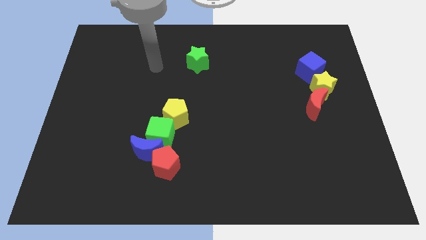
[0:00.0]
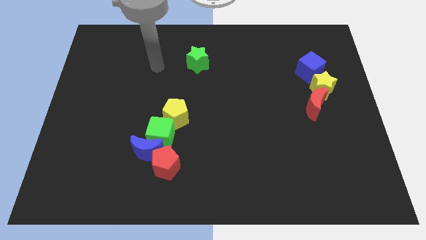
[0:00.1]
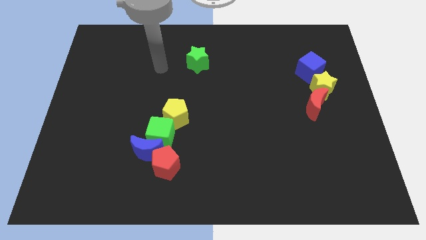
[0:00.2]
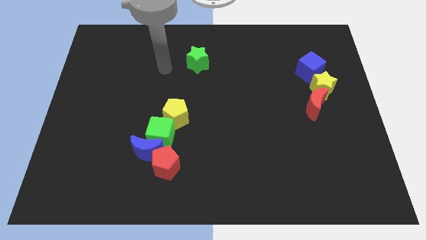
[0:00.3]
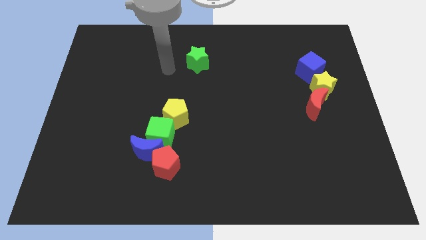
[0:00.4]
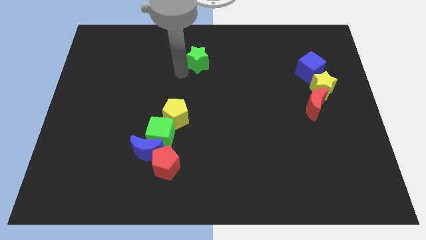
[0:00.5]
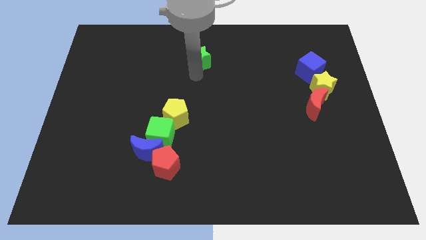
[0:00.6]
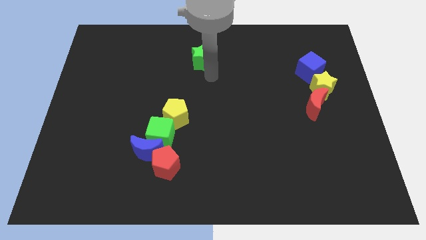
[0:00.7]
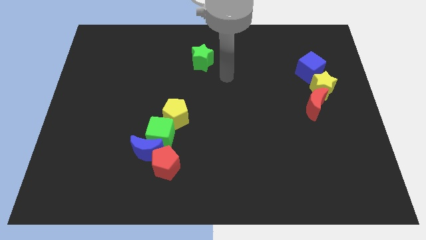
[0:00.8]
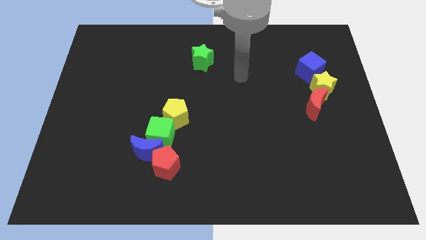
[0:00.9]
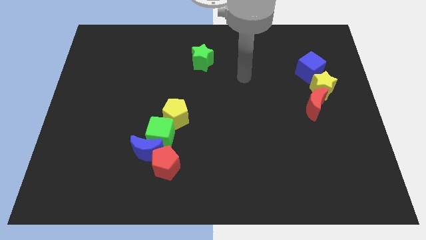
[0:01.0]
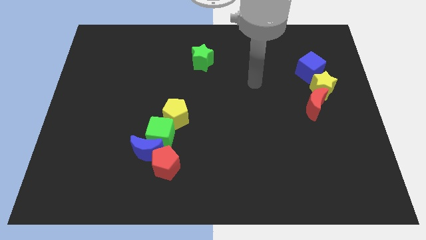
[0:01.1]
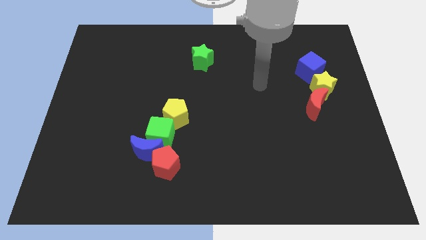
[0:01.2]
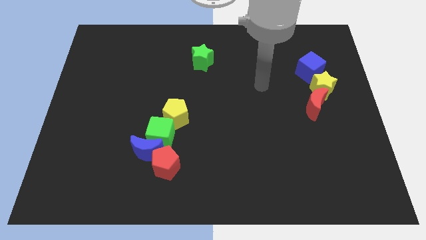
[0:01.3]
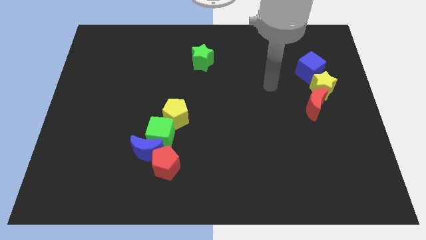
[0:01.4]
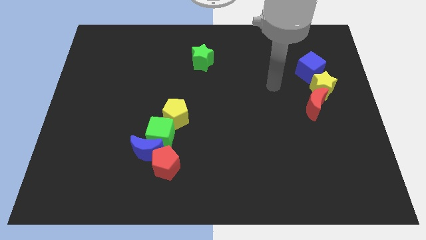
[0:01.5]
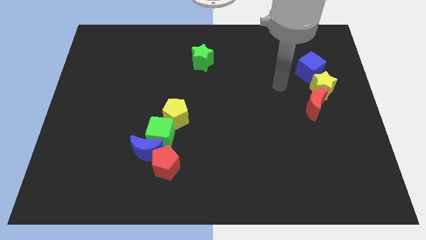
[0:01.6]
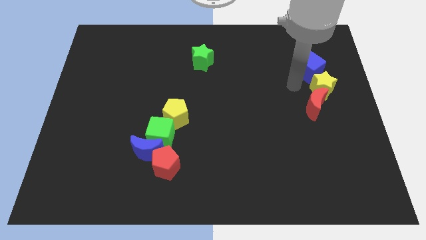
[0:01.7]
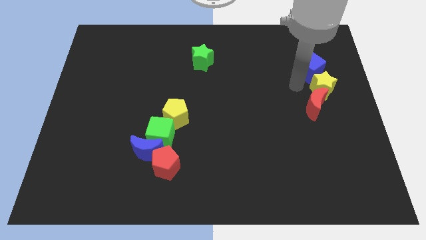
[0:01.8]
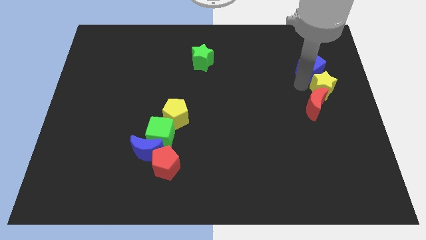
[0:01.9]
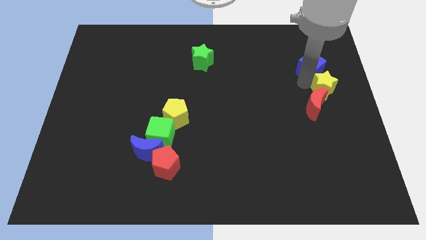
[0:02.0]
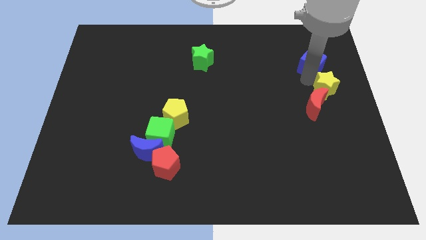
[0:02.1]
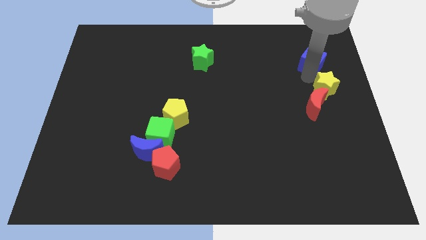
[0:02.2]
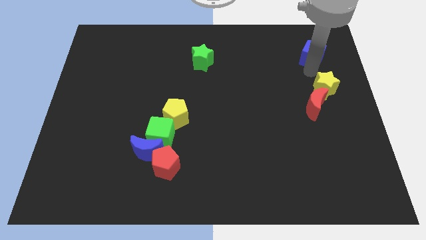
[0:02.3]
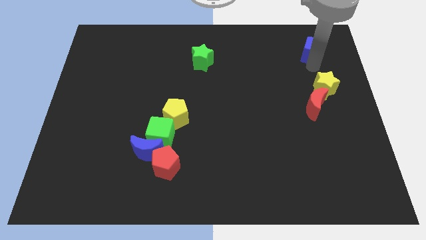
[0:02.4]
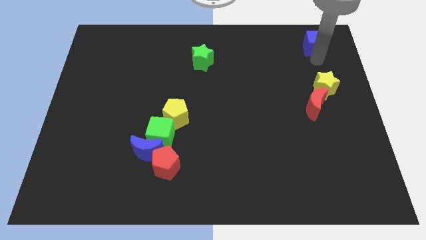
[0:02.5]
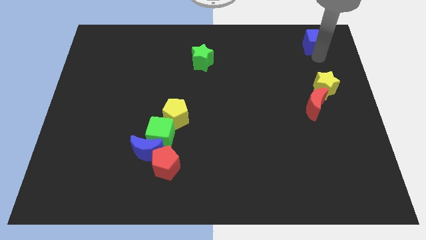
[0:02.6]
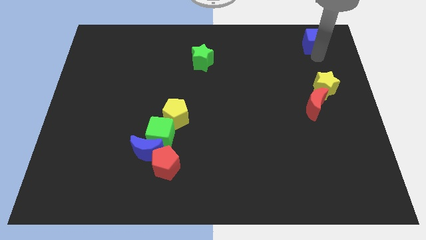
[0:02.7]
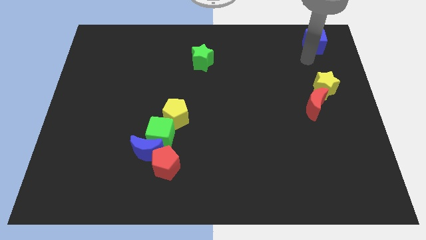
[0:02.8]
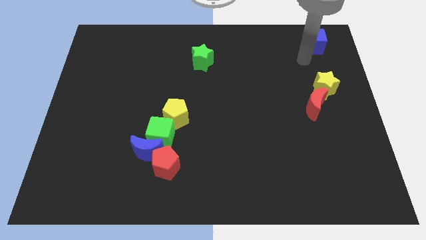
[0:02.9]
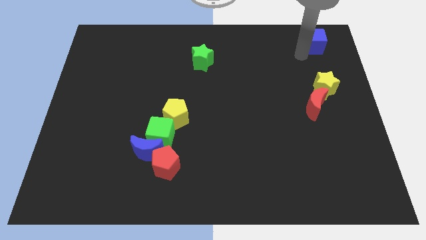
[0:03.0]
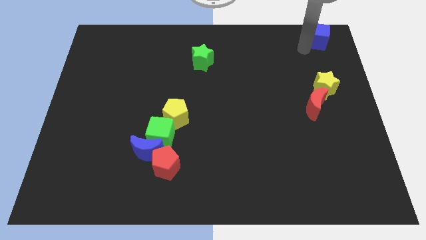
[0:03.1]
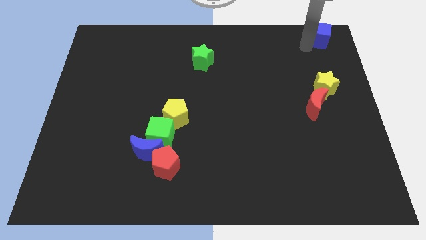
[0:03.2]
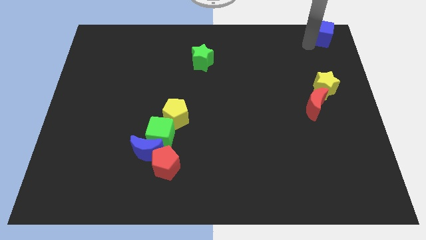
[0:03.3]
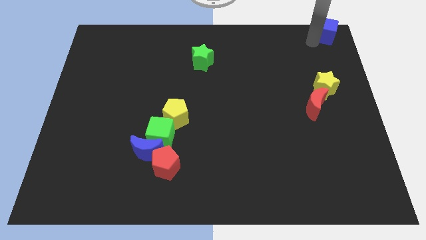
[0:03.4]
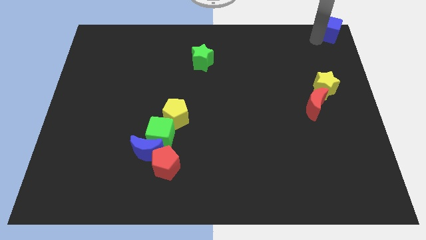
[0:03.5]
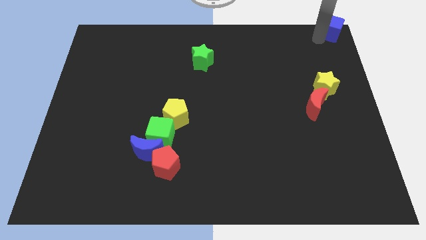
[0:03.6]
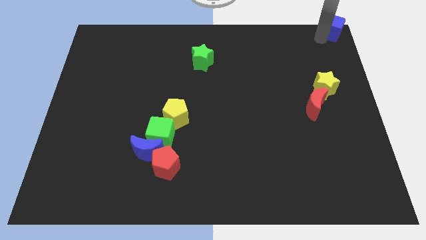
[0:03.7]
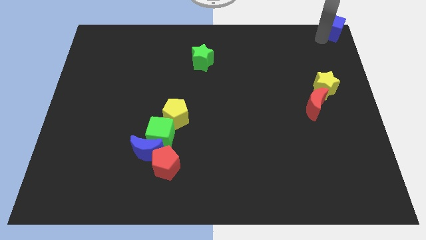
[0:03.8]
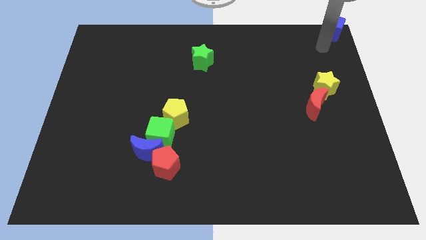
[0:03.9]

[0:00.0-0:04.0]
place the blue cube to the top right corner of the board

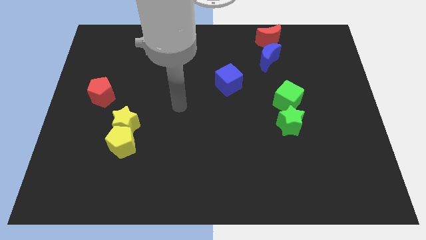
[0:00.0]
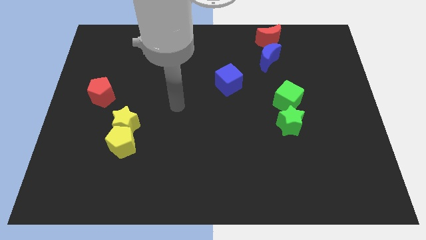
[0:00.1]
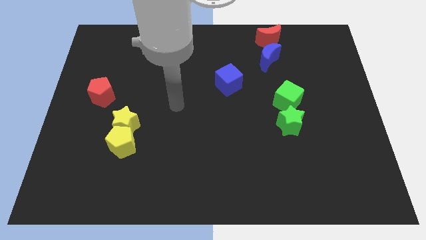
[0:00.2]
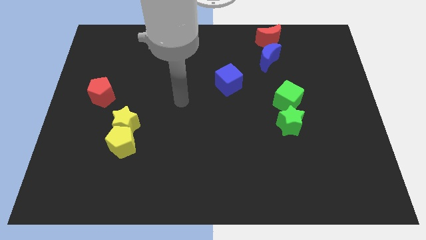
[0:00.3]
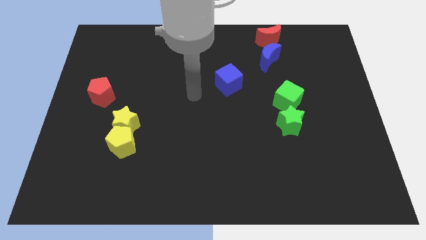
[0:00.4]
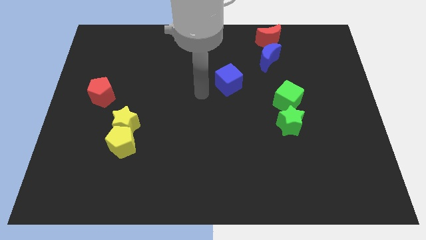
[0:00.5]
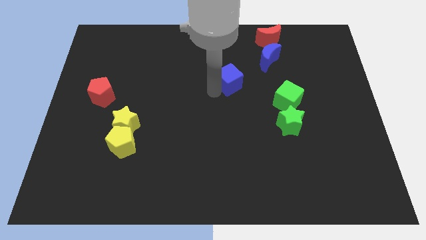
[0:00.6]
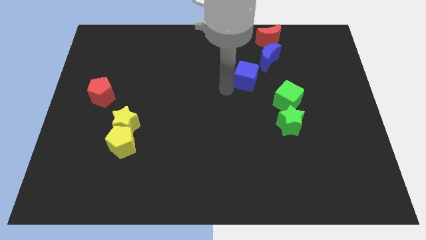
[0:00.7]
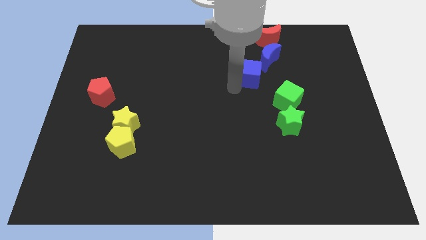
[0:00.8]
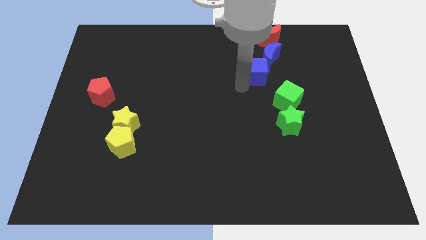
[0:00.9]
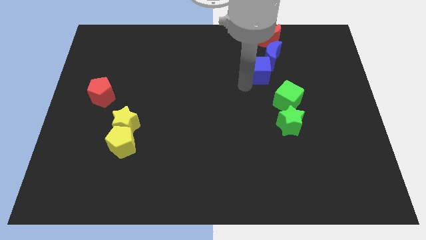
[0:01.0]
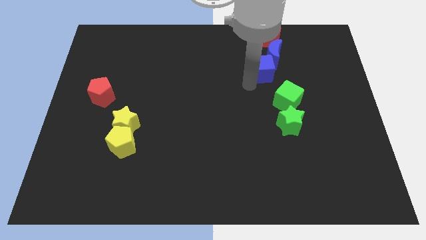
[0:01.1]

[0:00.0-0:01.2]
push the blue cube into blue crescent

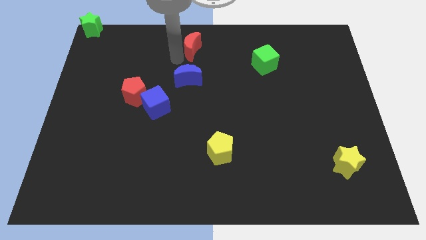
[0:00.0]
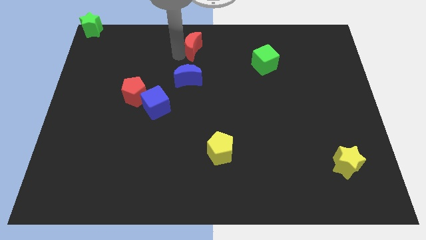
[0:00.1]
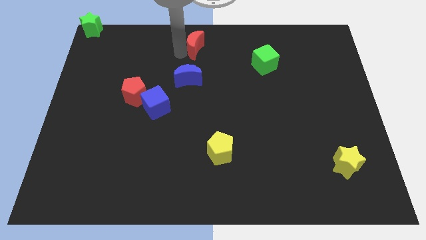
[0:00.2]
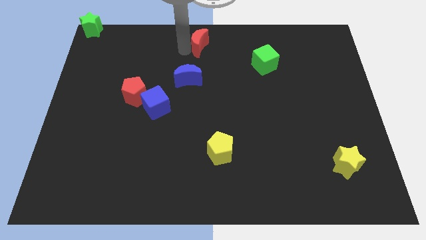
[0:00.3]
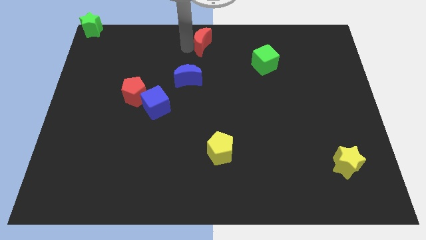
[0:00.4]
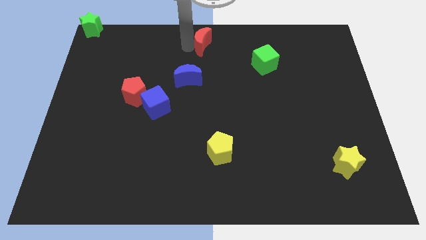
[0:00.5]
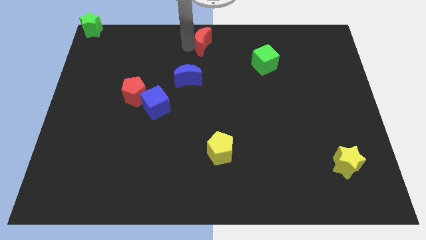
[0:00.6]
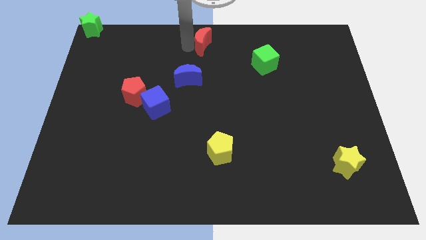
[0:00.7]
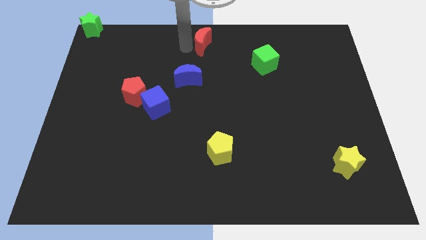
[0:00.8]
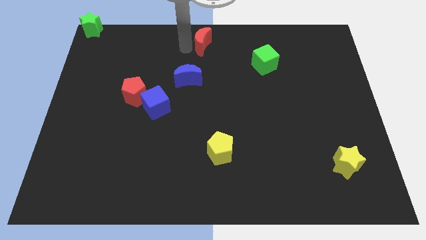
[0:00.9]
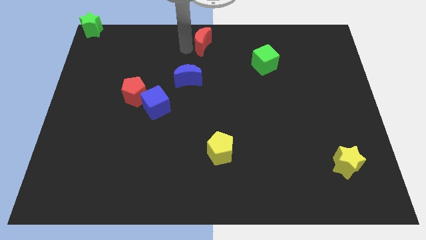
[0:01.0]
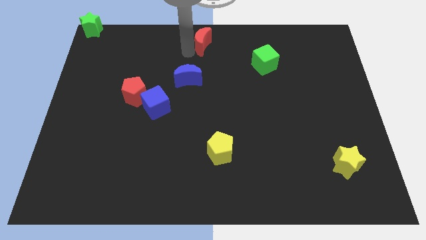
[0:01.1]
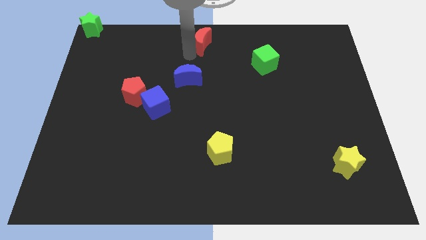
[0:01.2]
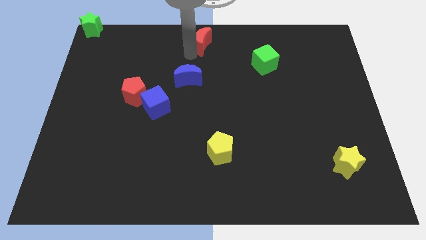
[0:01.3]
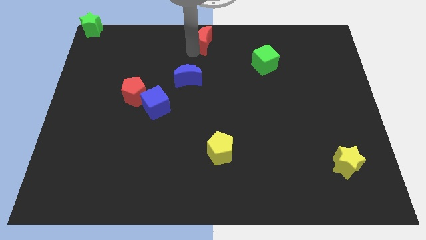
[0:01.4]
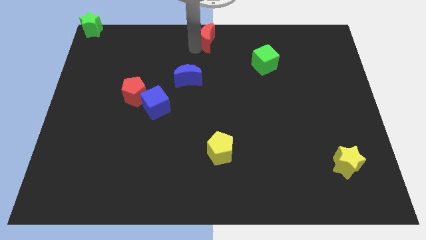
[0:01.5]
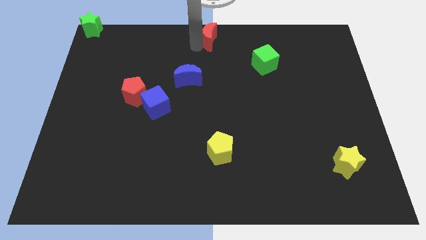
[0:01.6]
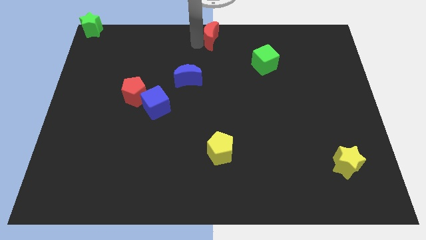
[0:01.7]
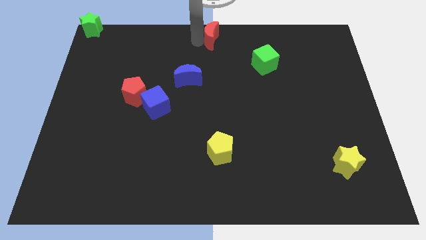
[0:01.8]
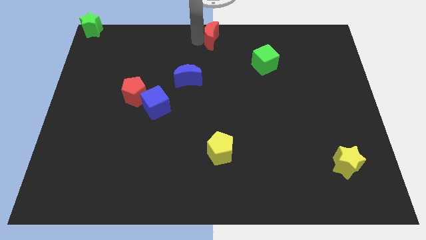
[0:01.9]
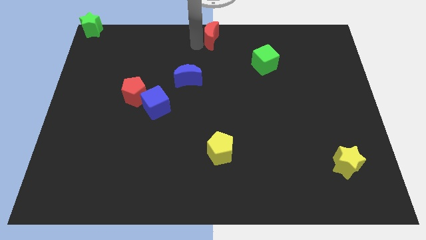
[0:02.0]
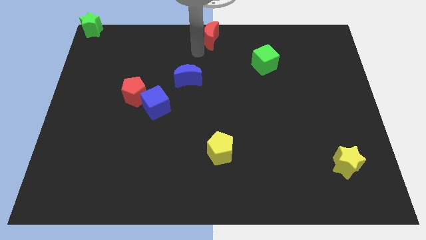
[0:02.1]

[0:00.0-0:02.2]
place red moon to the top center of the board

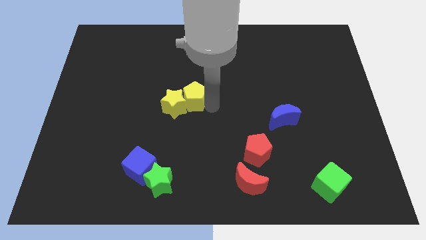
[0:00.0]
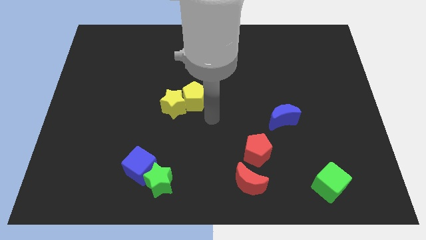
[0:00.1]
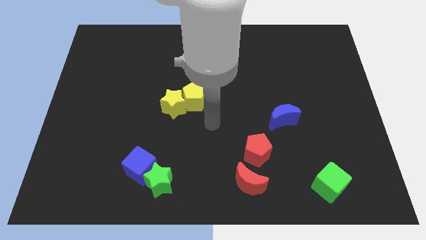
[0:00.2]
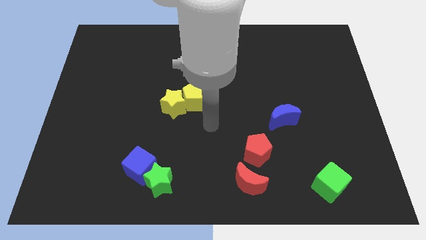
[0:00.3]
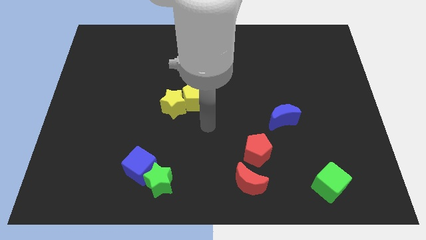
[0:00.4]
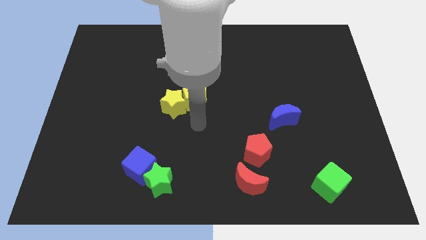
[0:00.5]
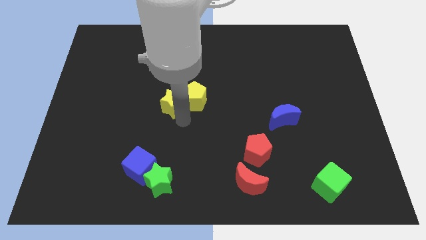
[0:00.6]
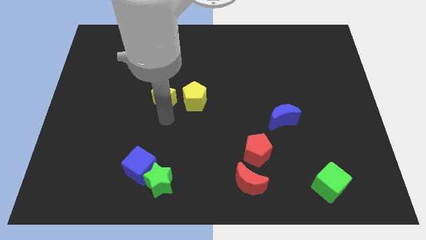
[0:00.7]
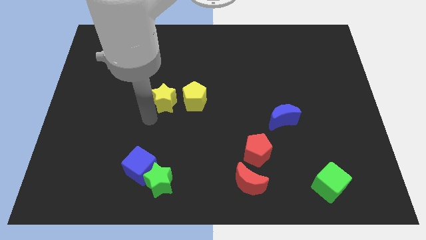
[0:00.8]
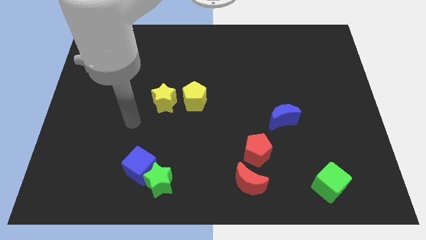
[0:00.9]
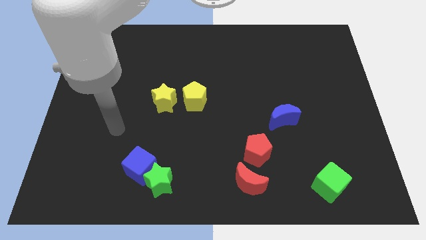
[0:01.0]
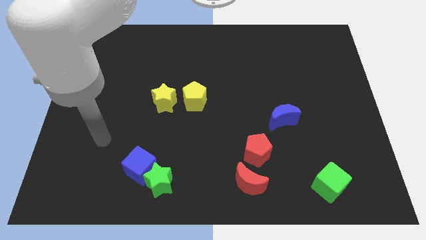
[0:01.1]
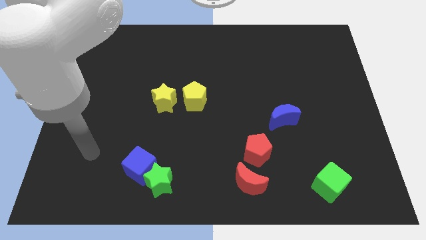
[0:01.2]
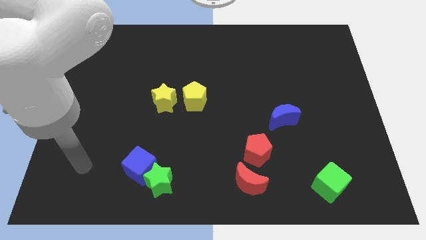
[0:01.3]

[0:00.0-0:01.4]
separate yellow star and yellow pentagon
